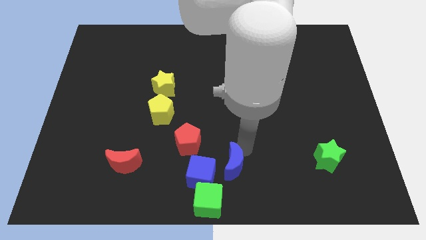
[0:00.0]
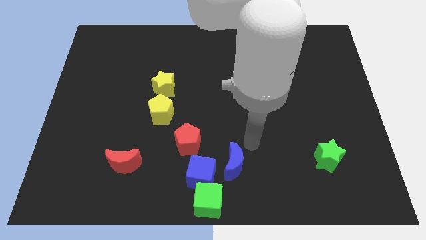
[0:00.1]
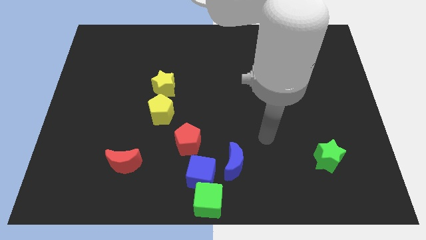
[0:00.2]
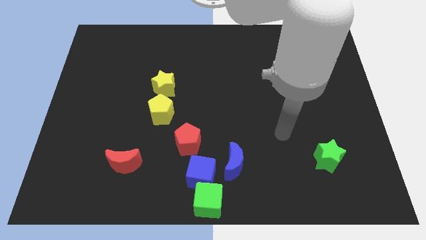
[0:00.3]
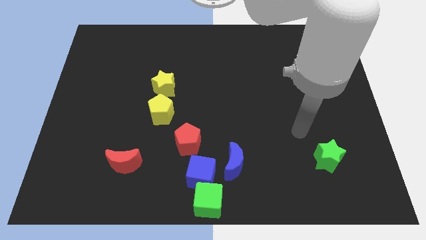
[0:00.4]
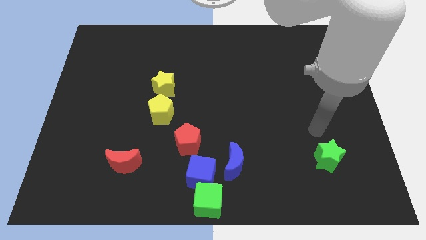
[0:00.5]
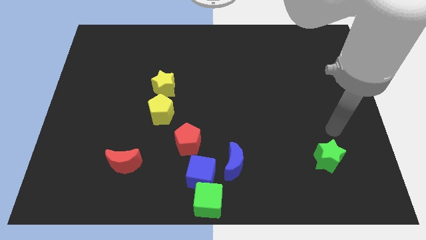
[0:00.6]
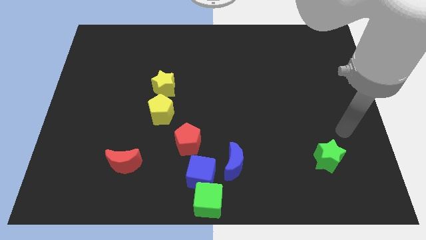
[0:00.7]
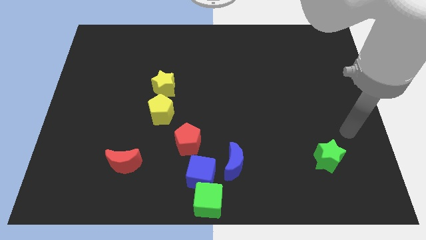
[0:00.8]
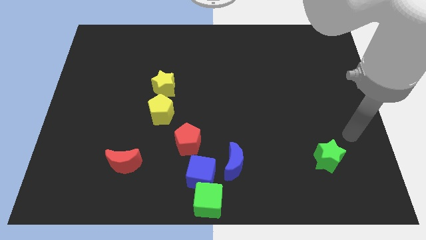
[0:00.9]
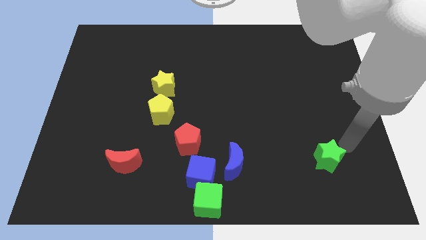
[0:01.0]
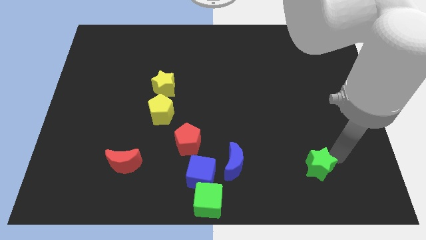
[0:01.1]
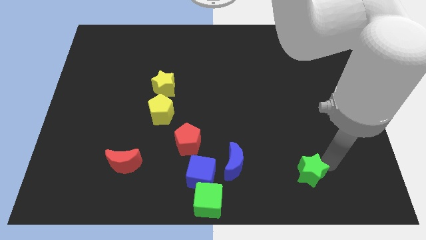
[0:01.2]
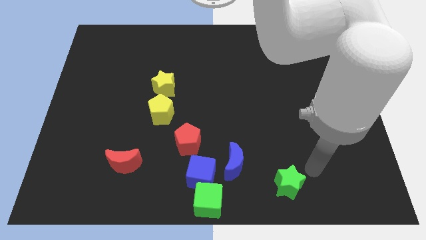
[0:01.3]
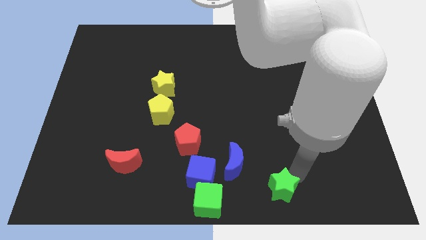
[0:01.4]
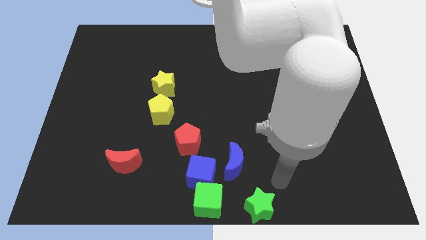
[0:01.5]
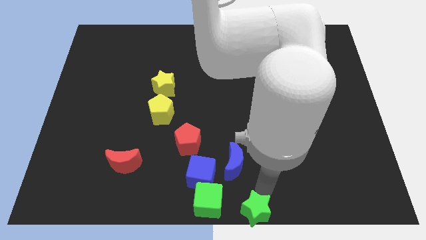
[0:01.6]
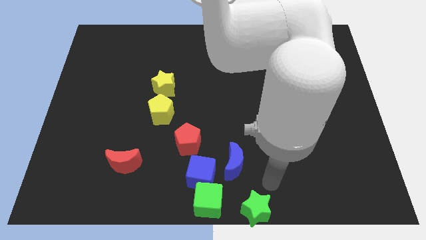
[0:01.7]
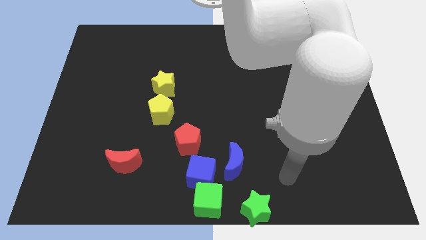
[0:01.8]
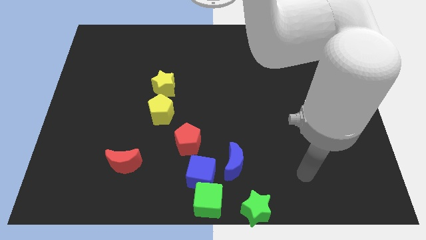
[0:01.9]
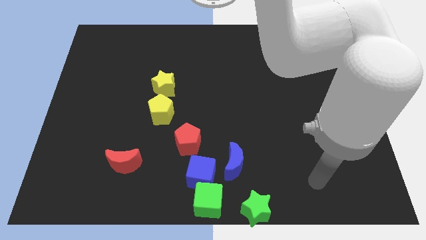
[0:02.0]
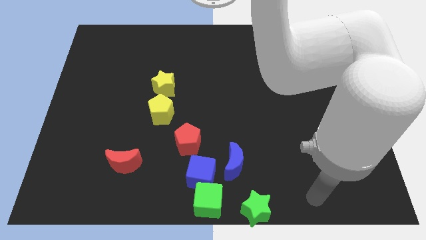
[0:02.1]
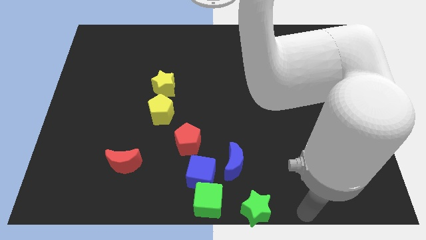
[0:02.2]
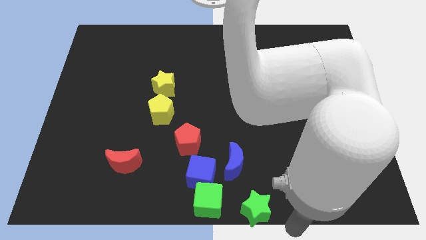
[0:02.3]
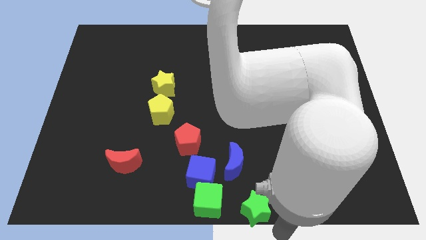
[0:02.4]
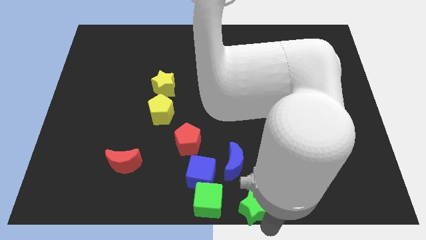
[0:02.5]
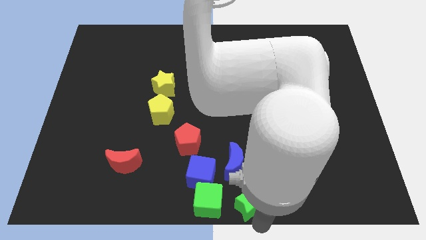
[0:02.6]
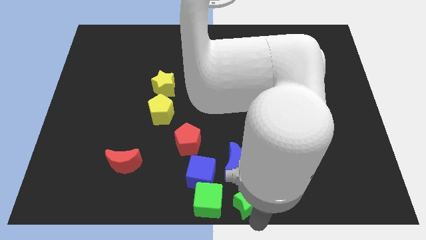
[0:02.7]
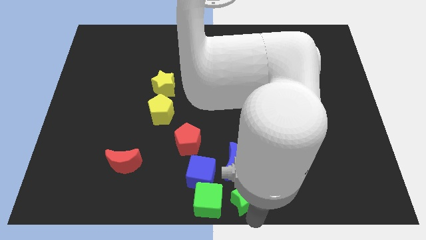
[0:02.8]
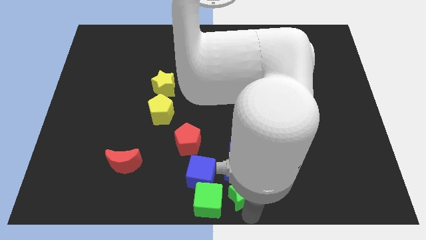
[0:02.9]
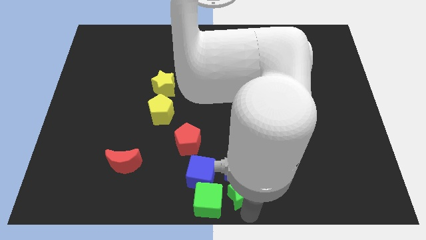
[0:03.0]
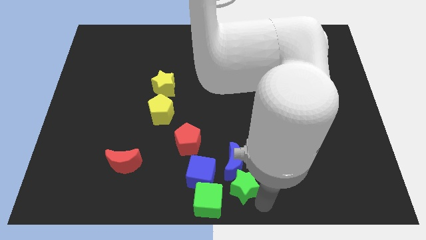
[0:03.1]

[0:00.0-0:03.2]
place the green star at the right side of the green cube

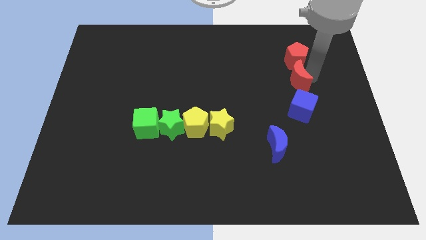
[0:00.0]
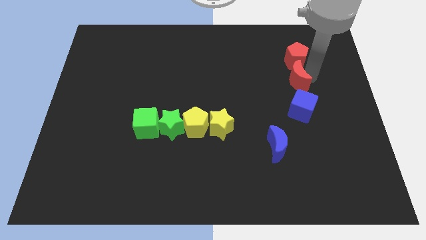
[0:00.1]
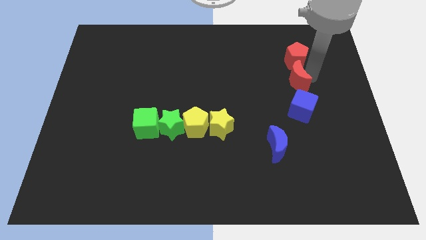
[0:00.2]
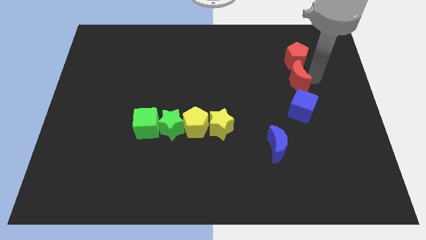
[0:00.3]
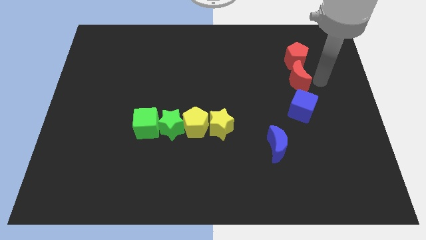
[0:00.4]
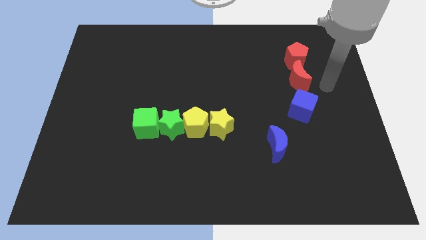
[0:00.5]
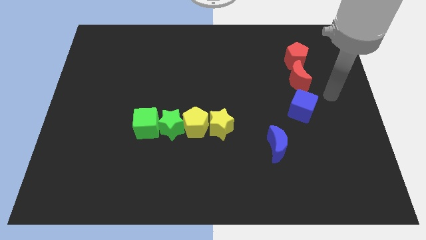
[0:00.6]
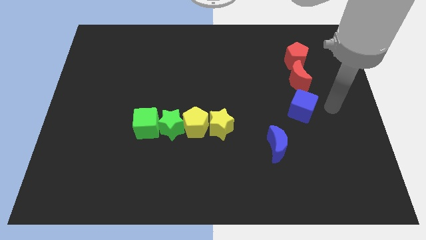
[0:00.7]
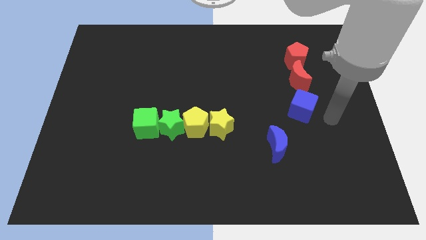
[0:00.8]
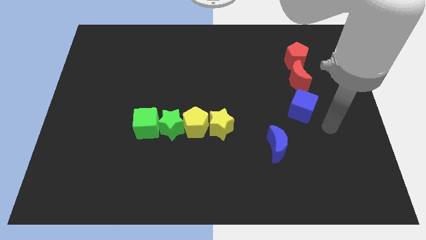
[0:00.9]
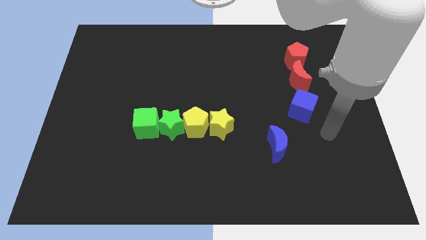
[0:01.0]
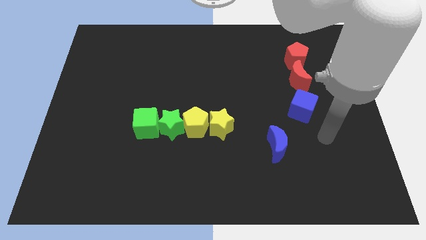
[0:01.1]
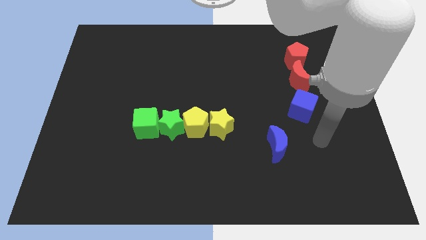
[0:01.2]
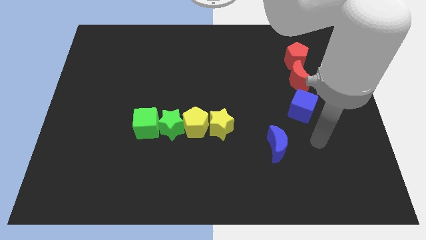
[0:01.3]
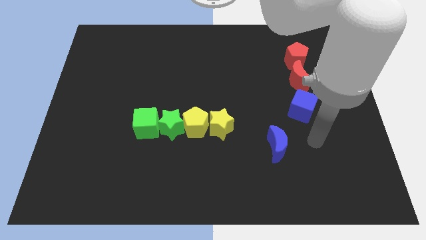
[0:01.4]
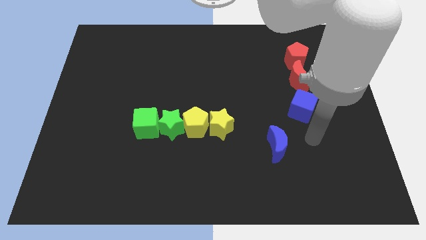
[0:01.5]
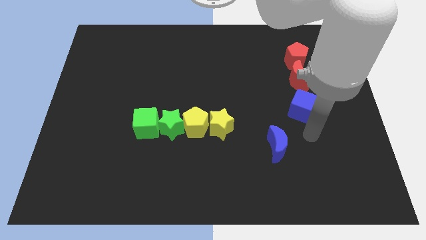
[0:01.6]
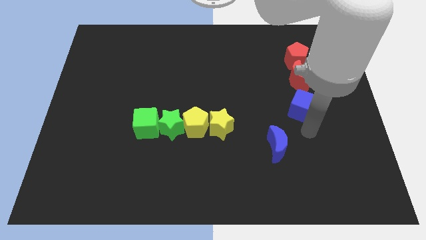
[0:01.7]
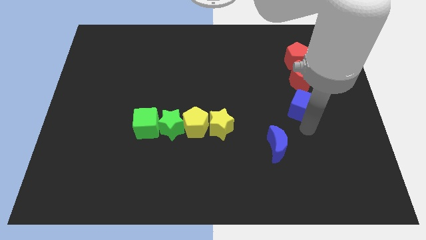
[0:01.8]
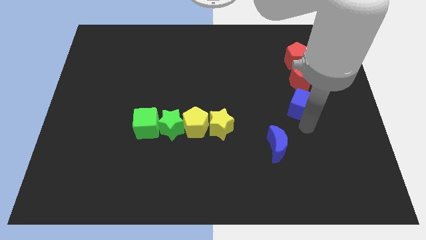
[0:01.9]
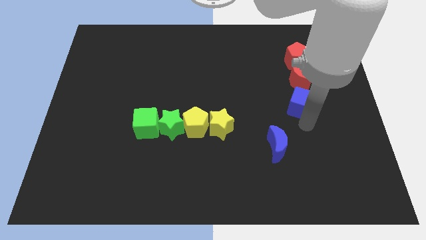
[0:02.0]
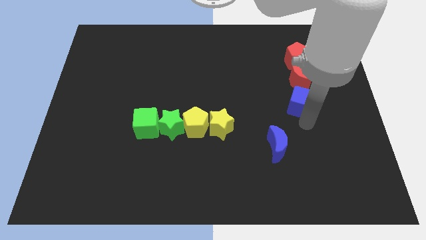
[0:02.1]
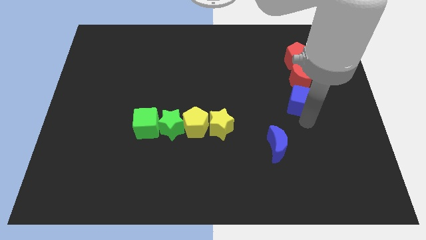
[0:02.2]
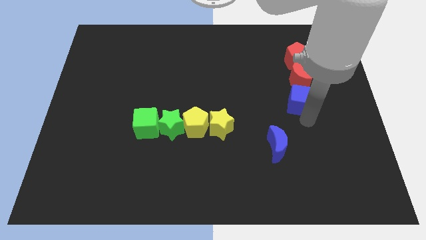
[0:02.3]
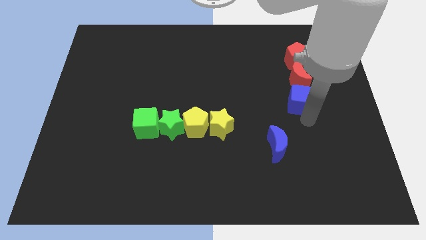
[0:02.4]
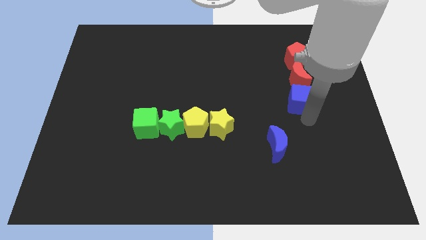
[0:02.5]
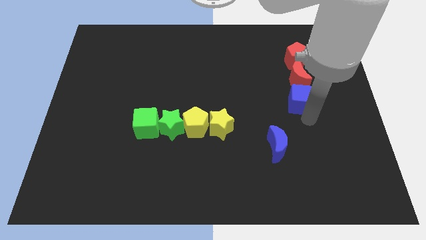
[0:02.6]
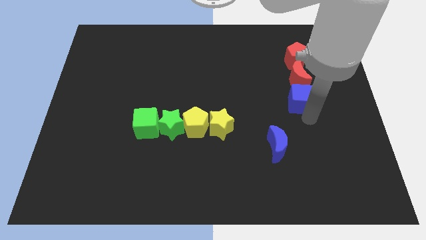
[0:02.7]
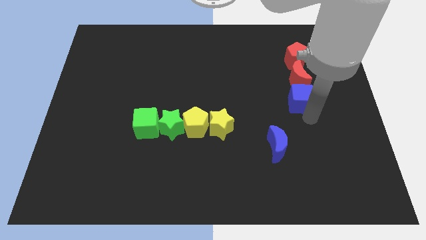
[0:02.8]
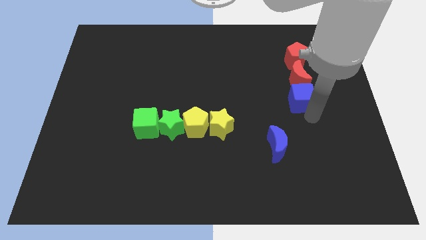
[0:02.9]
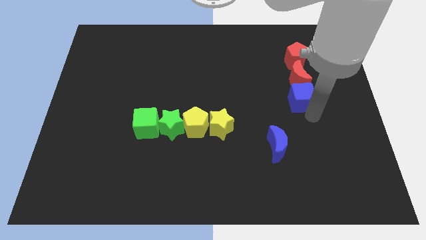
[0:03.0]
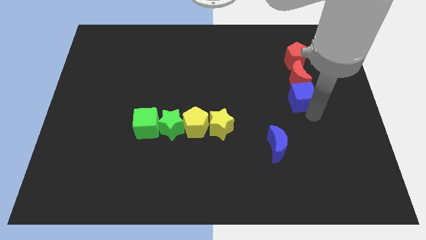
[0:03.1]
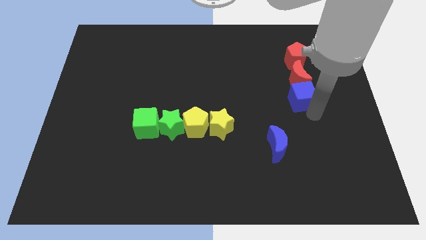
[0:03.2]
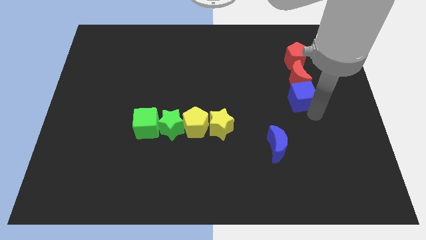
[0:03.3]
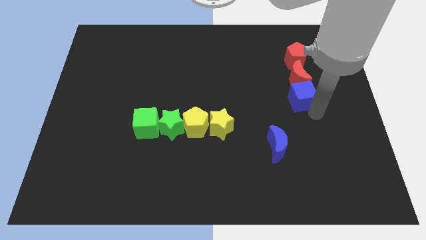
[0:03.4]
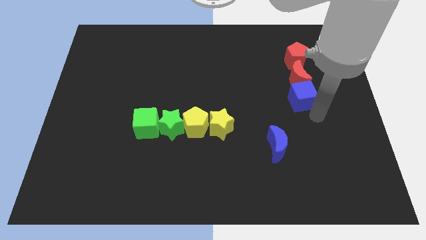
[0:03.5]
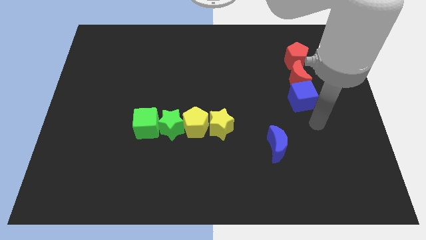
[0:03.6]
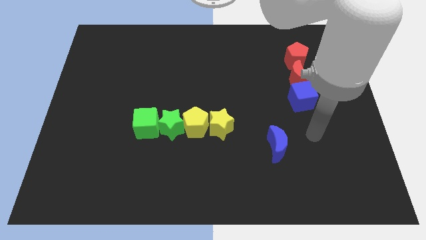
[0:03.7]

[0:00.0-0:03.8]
move the blue cube into the red moon

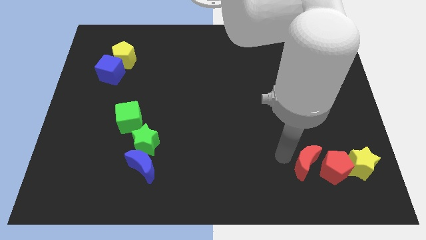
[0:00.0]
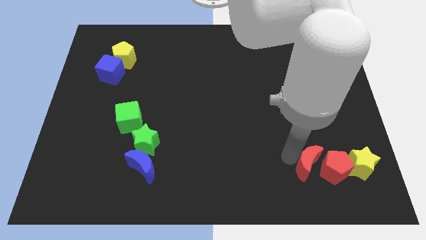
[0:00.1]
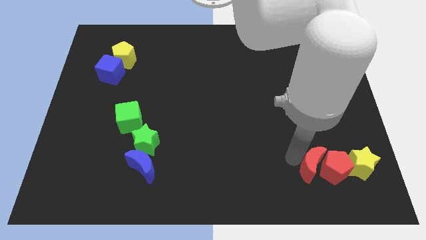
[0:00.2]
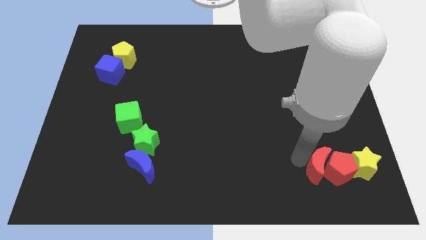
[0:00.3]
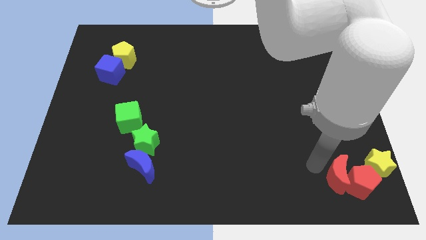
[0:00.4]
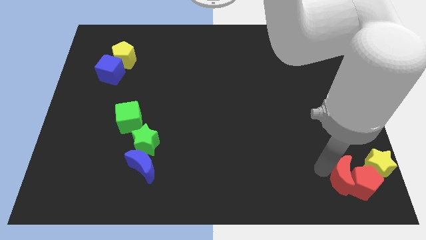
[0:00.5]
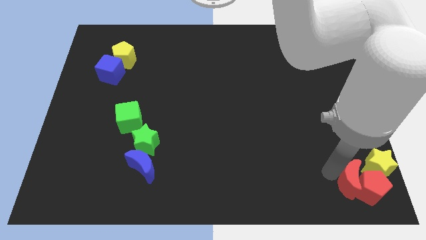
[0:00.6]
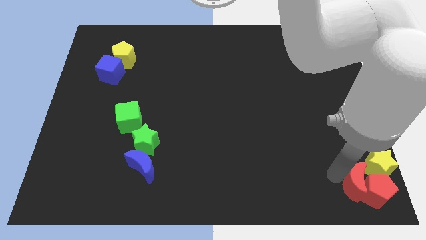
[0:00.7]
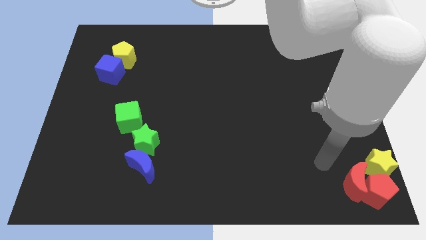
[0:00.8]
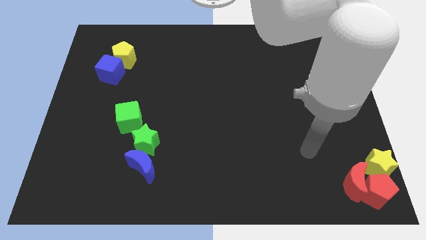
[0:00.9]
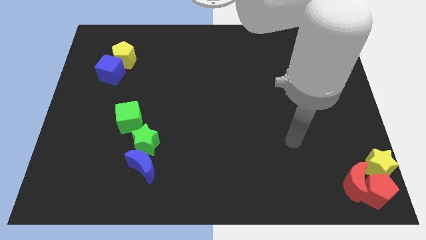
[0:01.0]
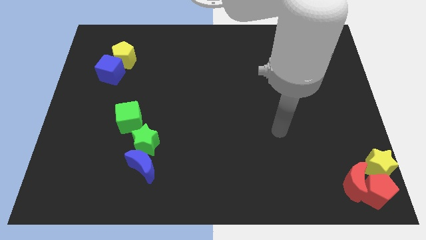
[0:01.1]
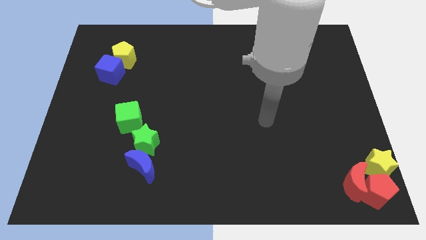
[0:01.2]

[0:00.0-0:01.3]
push red moon and red pentagon to the bottom right corner of the board

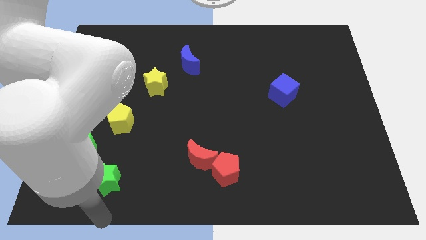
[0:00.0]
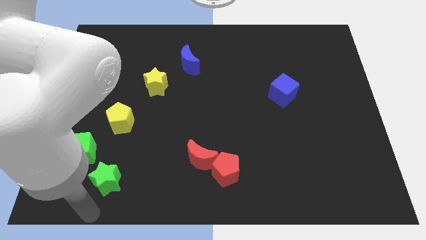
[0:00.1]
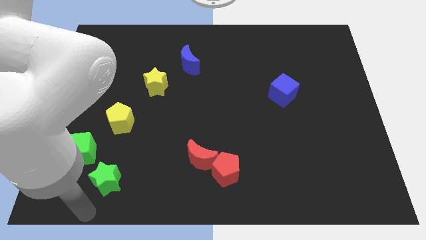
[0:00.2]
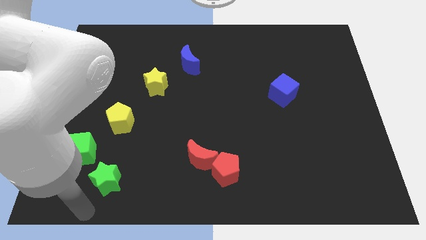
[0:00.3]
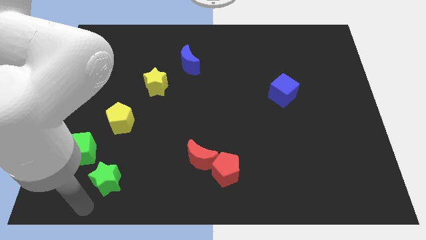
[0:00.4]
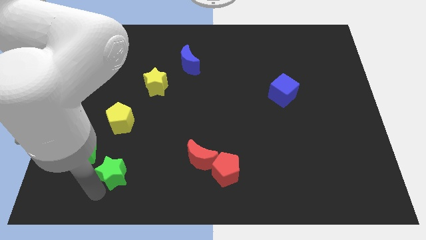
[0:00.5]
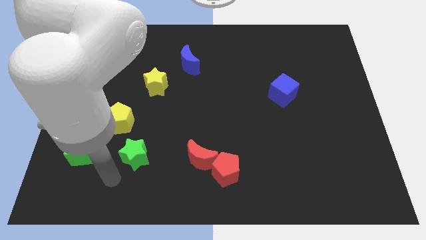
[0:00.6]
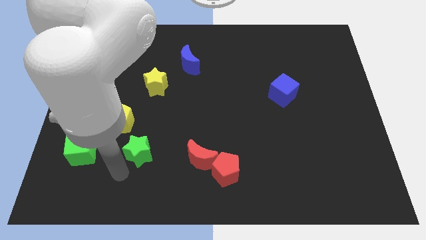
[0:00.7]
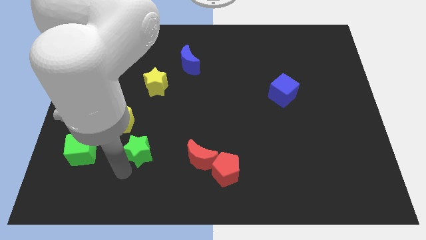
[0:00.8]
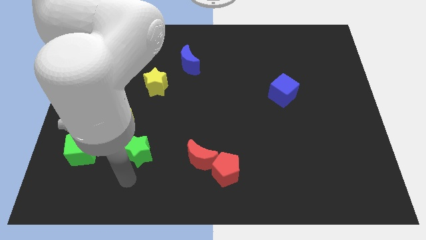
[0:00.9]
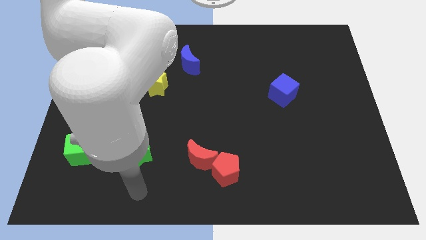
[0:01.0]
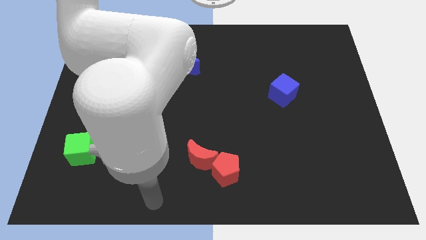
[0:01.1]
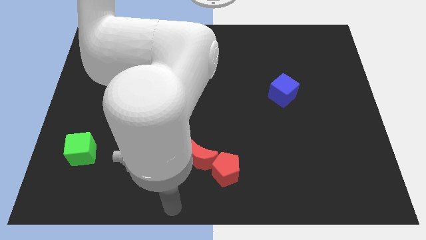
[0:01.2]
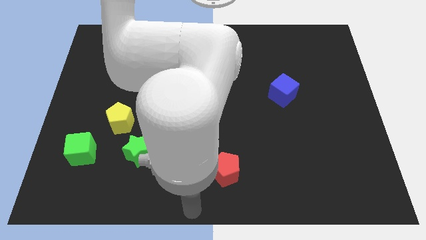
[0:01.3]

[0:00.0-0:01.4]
place the green star diagonally to the yellow pentagon
